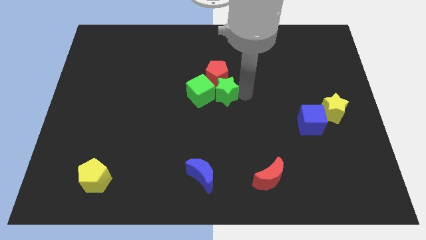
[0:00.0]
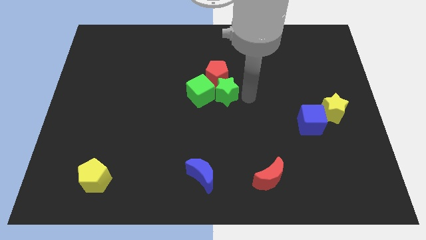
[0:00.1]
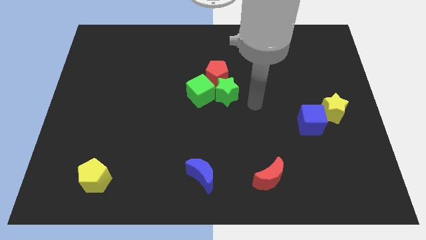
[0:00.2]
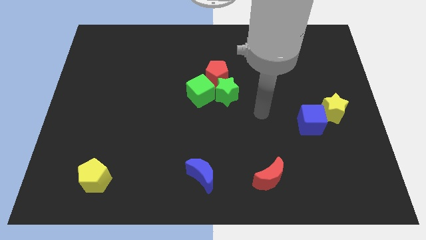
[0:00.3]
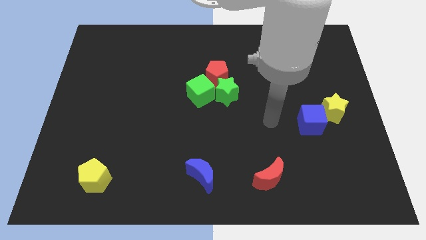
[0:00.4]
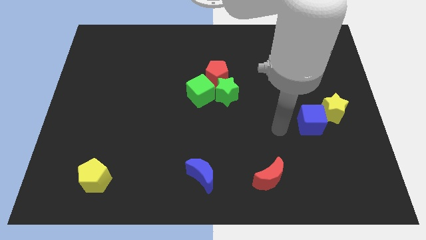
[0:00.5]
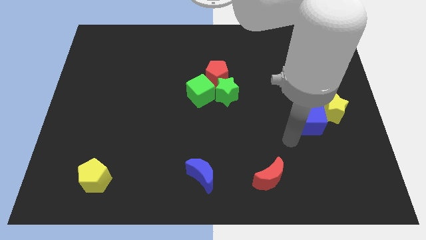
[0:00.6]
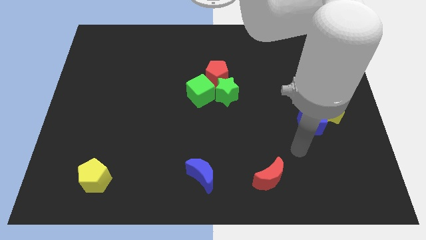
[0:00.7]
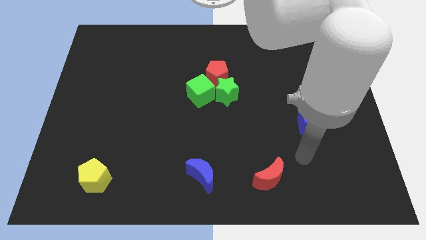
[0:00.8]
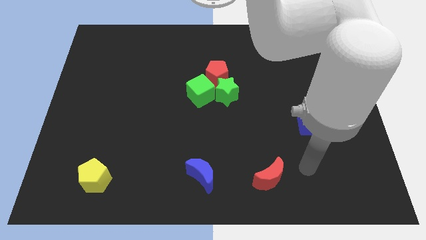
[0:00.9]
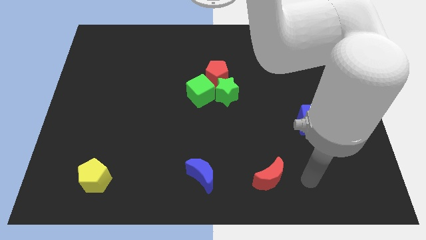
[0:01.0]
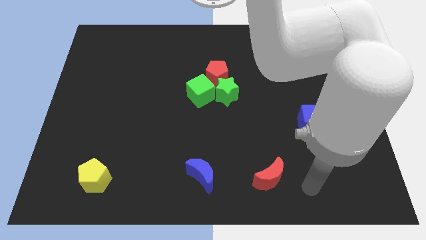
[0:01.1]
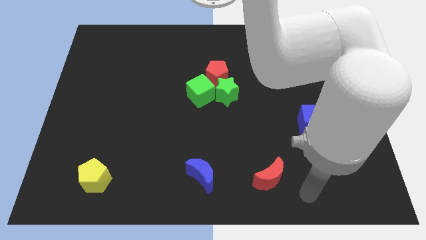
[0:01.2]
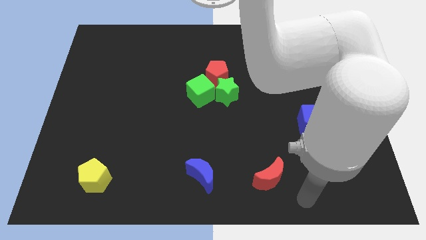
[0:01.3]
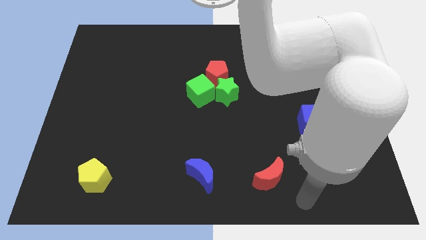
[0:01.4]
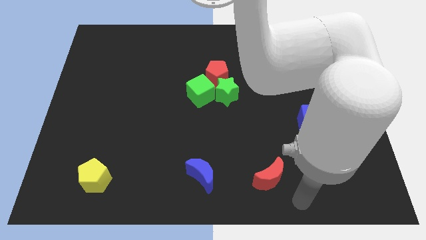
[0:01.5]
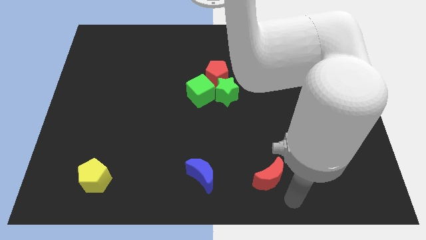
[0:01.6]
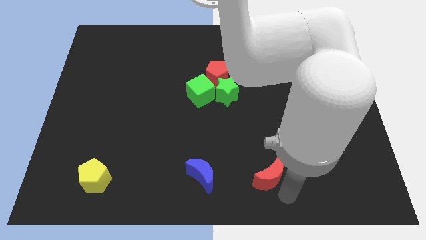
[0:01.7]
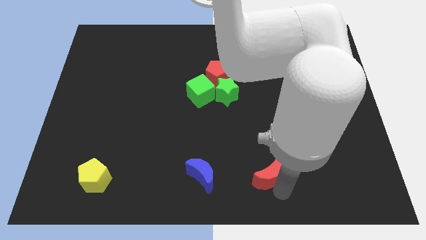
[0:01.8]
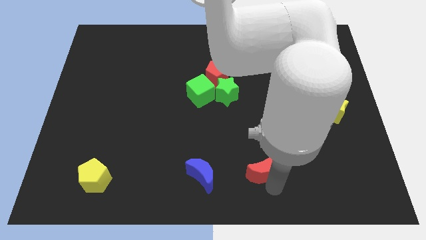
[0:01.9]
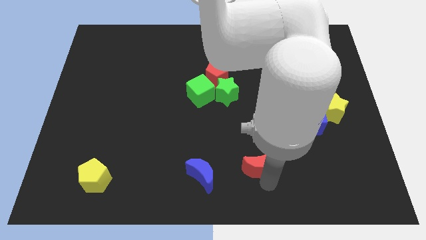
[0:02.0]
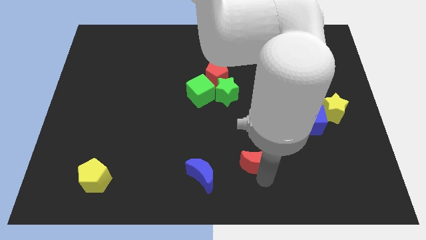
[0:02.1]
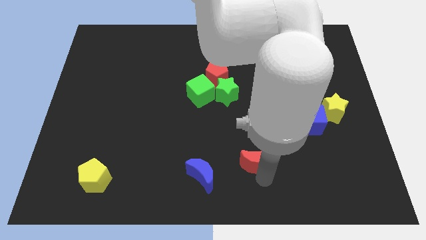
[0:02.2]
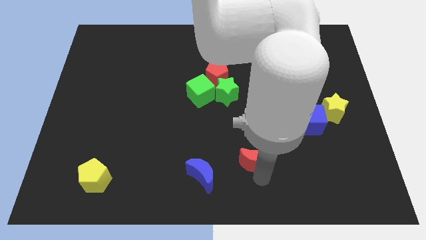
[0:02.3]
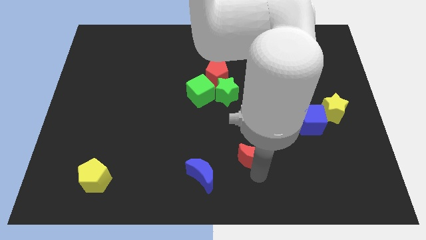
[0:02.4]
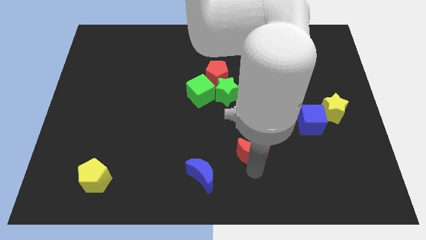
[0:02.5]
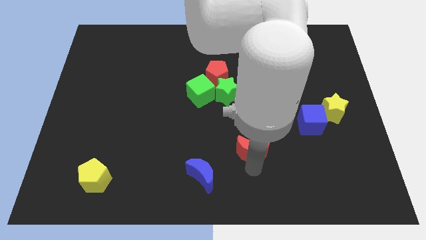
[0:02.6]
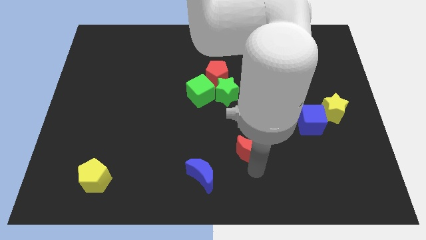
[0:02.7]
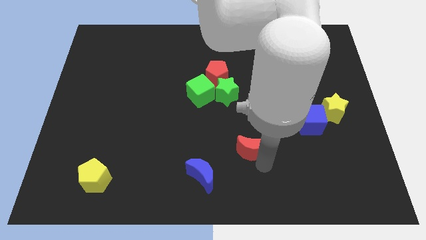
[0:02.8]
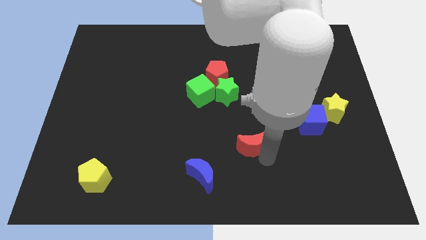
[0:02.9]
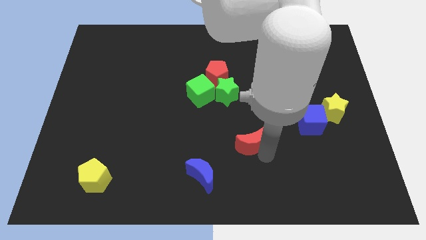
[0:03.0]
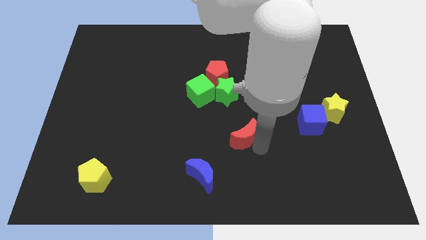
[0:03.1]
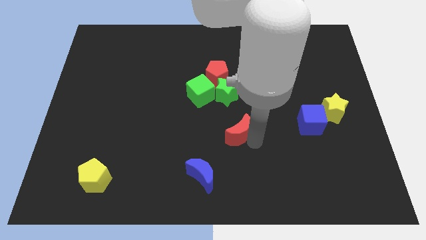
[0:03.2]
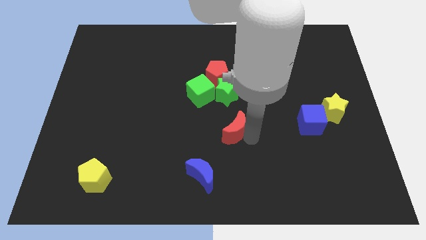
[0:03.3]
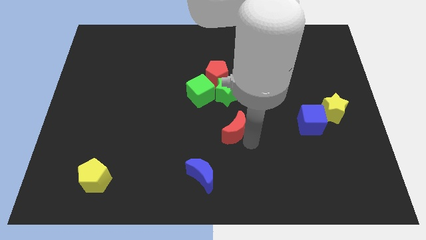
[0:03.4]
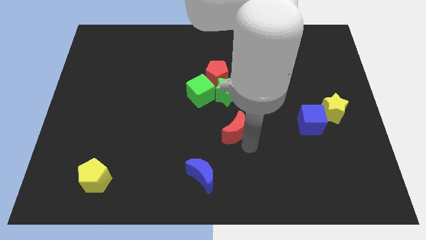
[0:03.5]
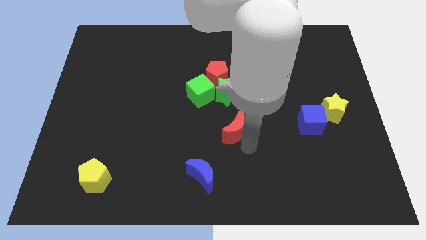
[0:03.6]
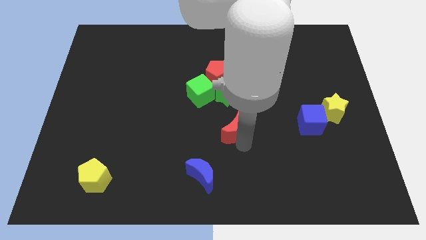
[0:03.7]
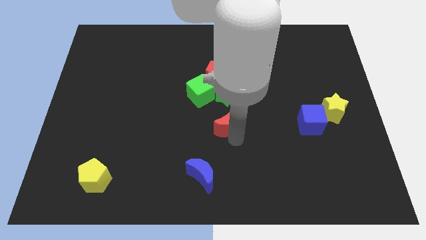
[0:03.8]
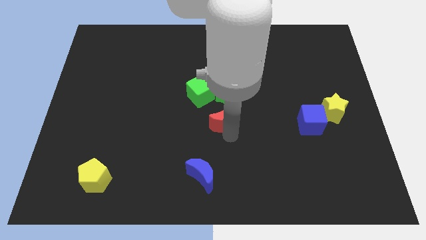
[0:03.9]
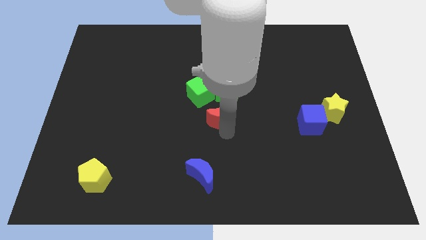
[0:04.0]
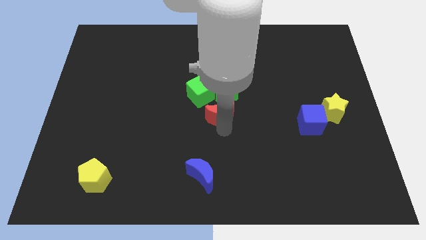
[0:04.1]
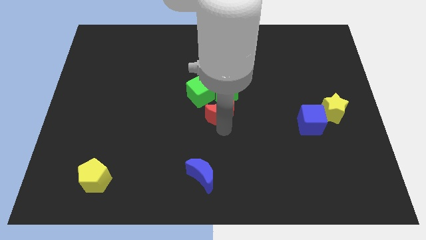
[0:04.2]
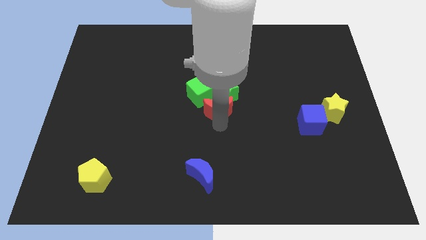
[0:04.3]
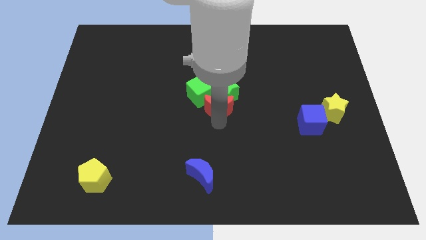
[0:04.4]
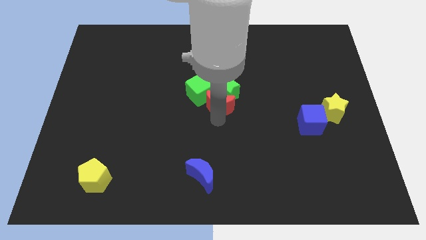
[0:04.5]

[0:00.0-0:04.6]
move the red crescent to the bottom of the green star

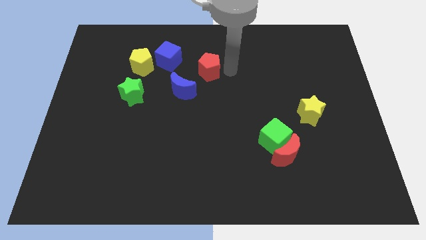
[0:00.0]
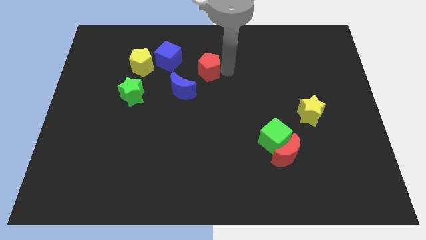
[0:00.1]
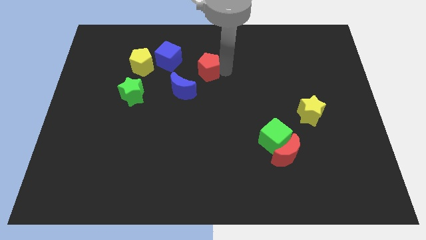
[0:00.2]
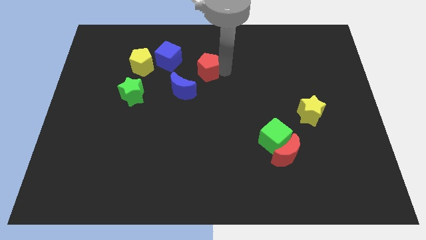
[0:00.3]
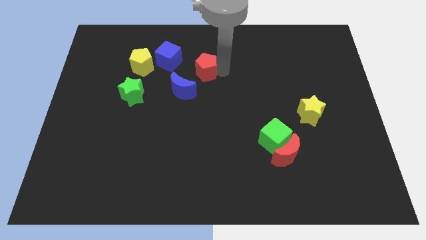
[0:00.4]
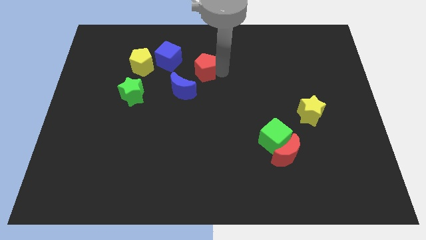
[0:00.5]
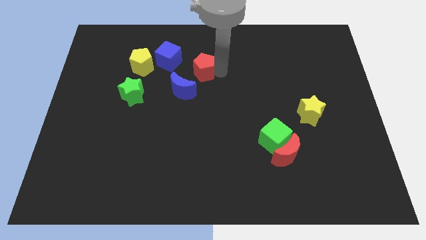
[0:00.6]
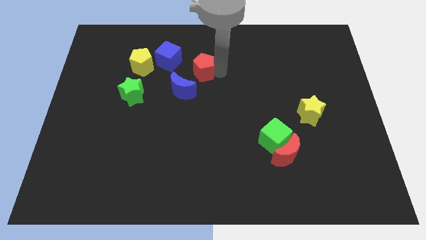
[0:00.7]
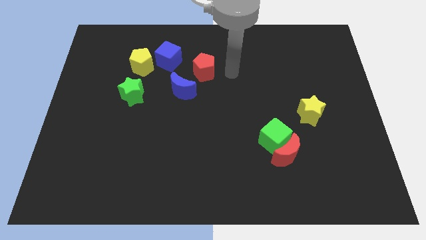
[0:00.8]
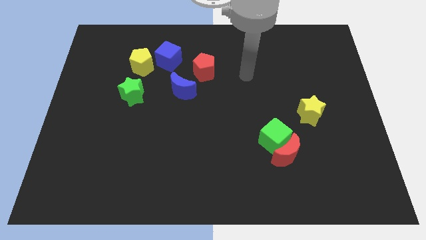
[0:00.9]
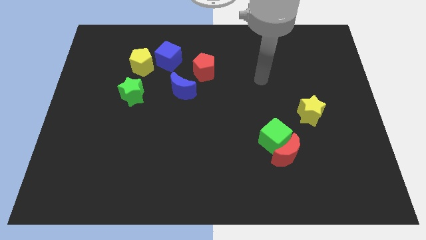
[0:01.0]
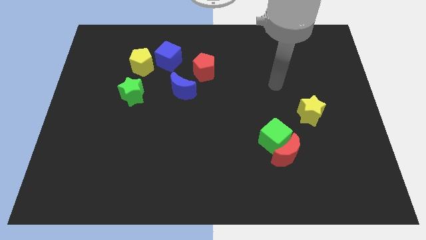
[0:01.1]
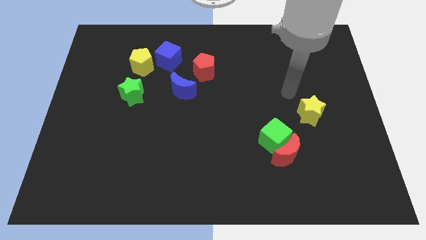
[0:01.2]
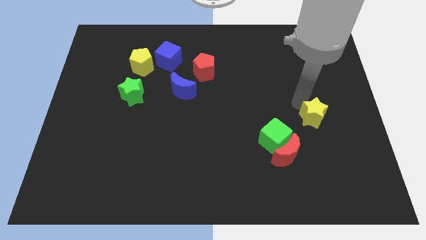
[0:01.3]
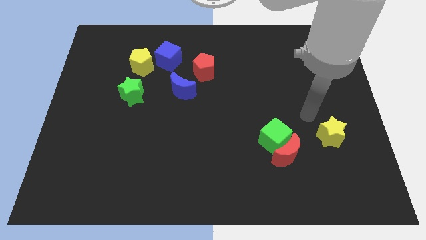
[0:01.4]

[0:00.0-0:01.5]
slightly move the red pentagon towards right side of the blue cube

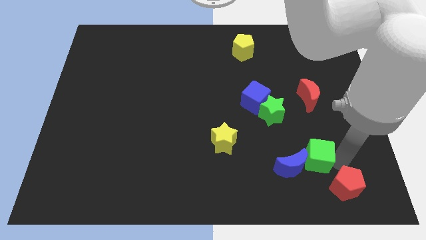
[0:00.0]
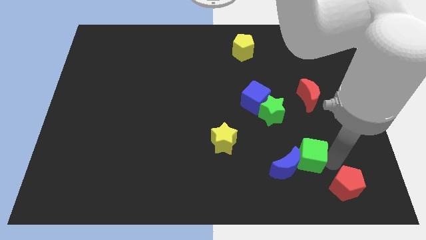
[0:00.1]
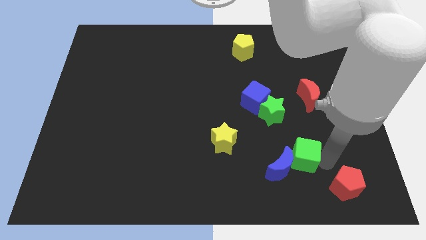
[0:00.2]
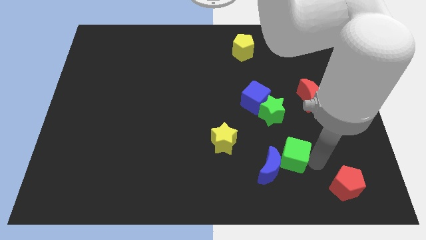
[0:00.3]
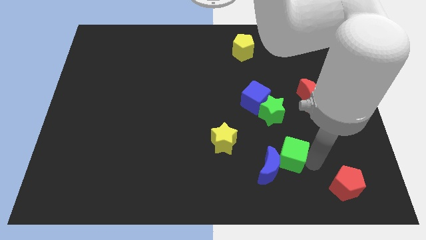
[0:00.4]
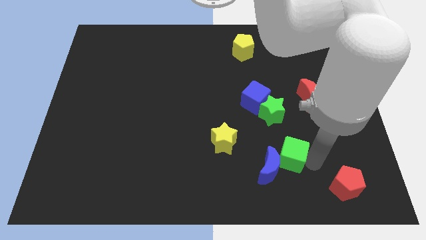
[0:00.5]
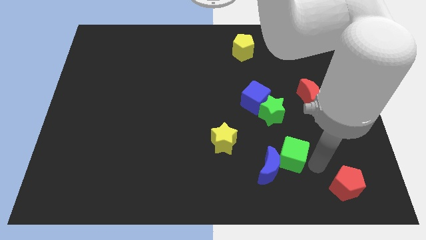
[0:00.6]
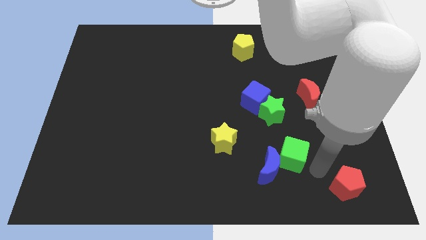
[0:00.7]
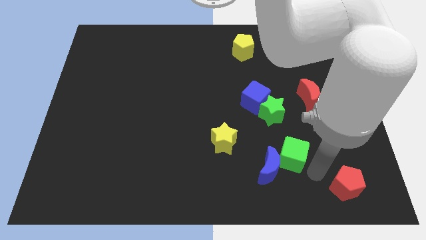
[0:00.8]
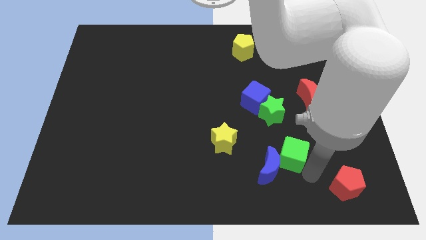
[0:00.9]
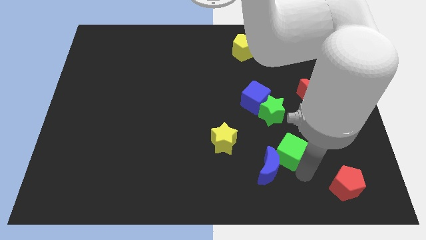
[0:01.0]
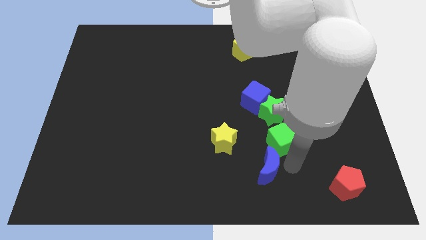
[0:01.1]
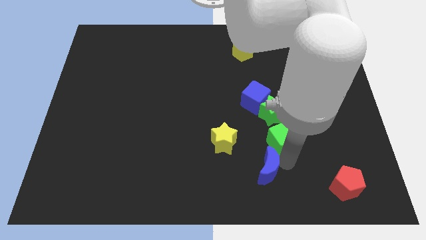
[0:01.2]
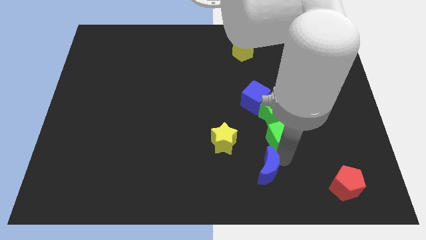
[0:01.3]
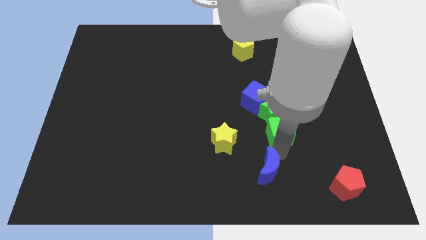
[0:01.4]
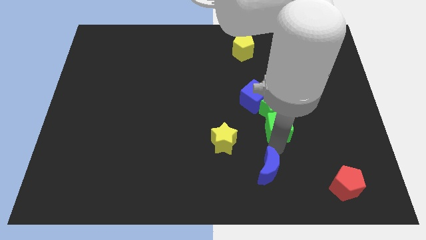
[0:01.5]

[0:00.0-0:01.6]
move the green cube to the bottom of the green star

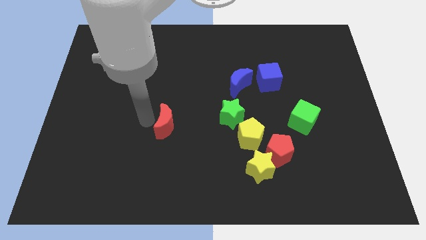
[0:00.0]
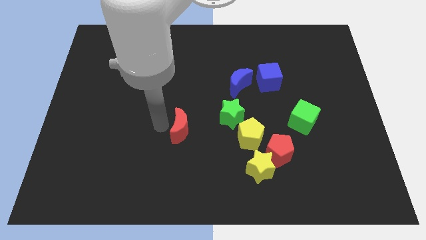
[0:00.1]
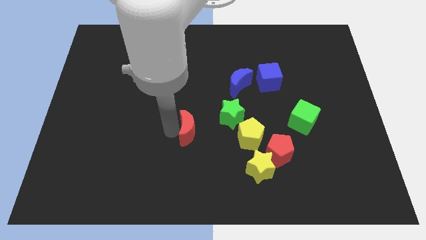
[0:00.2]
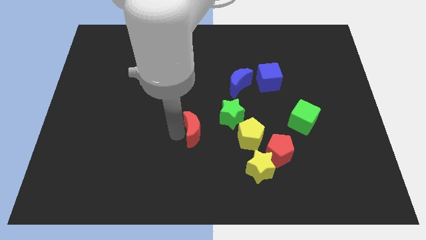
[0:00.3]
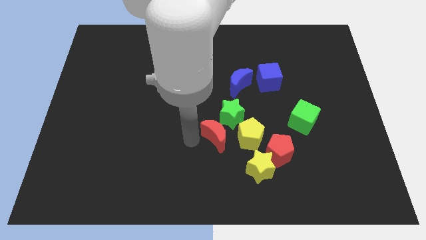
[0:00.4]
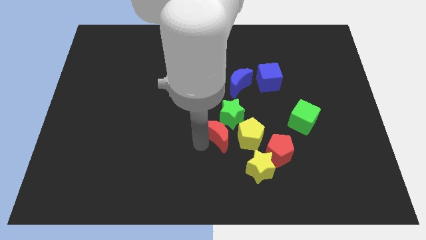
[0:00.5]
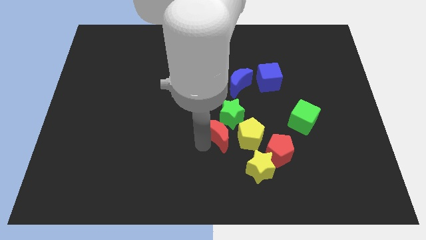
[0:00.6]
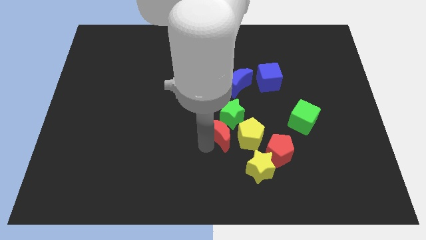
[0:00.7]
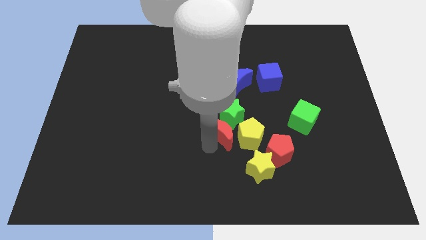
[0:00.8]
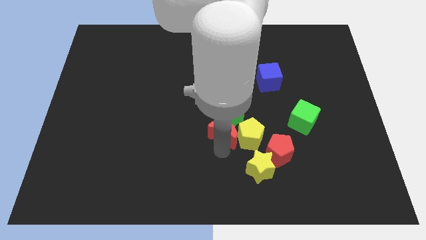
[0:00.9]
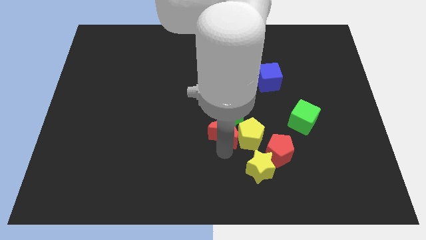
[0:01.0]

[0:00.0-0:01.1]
place the red moon left to the yellow pentagon
